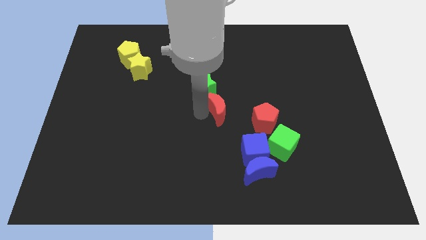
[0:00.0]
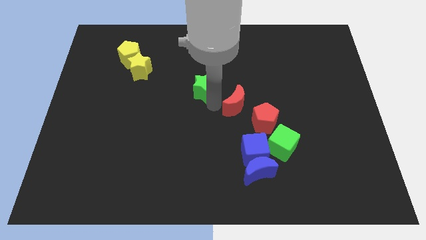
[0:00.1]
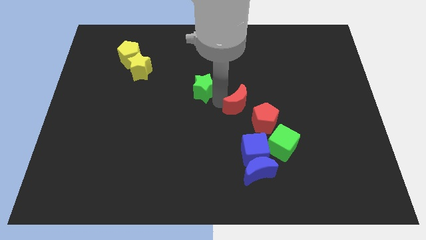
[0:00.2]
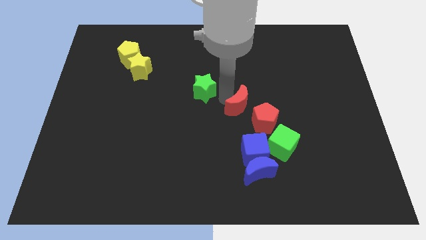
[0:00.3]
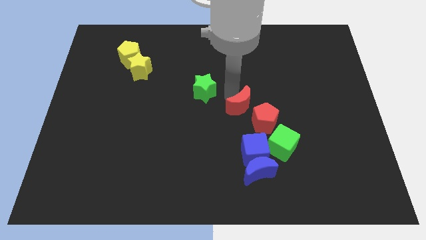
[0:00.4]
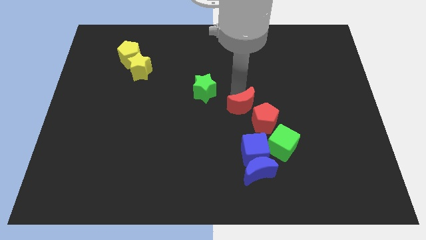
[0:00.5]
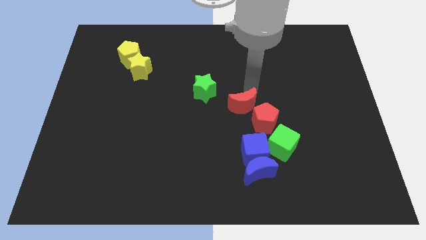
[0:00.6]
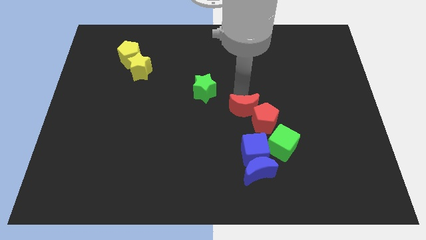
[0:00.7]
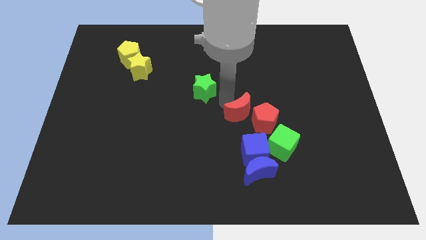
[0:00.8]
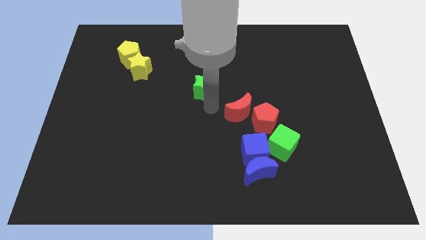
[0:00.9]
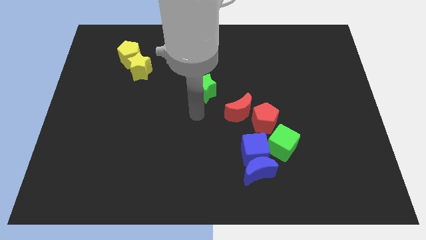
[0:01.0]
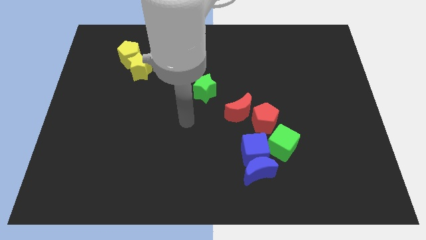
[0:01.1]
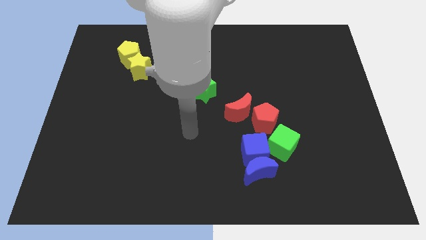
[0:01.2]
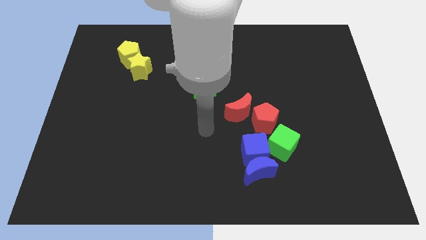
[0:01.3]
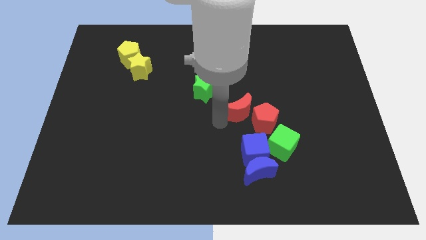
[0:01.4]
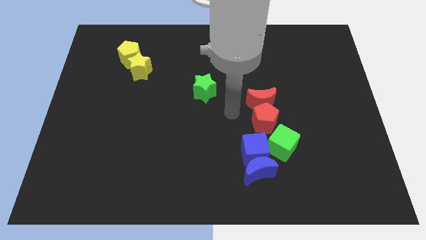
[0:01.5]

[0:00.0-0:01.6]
move the red crescent to the left of the red pentagon

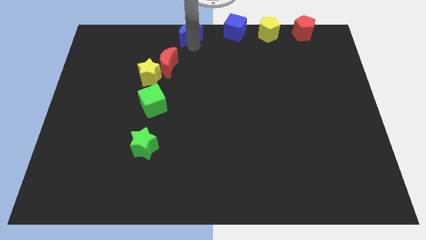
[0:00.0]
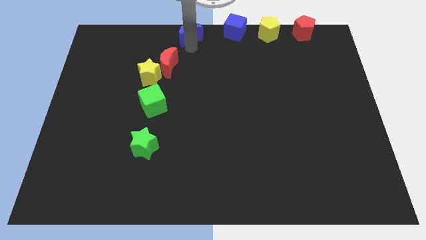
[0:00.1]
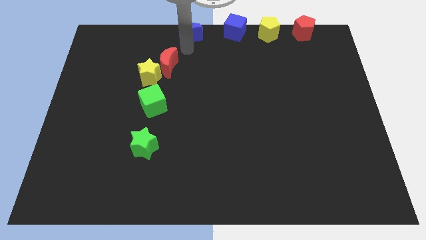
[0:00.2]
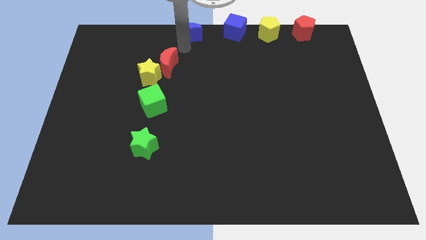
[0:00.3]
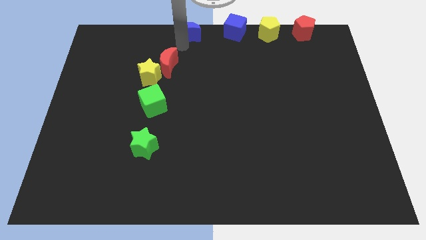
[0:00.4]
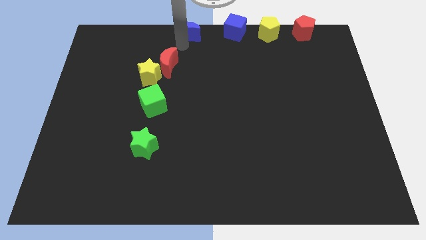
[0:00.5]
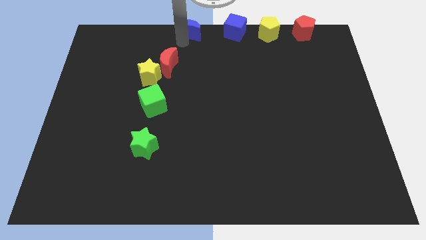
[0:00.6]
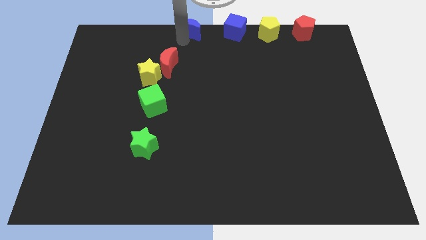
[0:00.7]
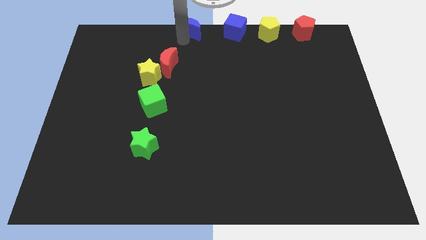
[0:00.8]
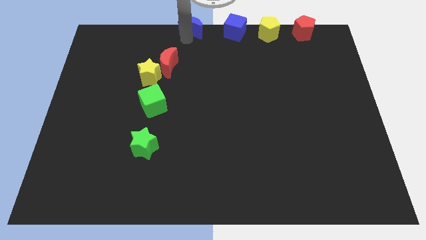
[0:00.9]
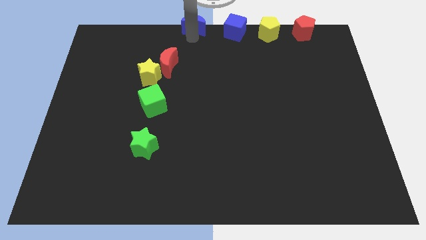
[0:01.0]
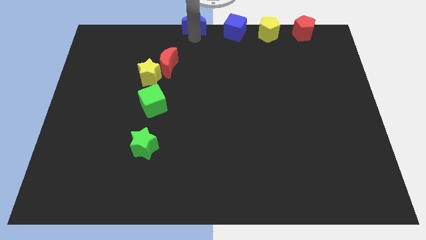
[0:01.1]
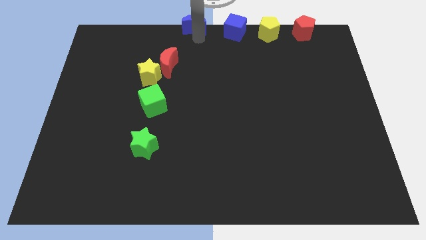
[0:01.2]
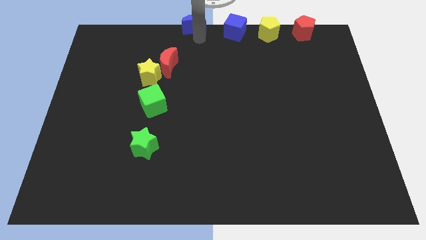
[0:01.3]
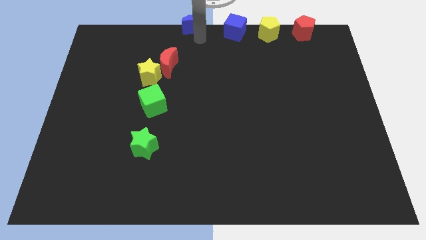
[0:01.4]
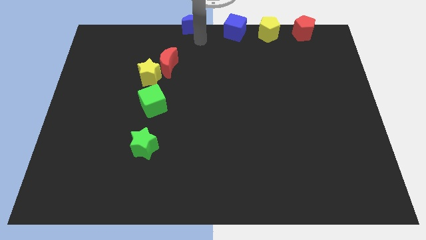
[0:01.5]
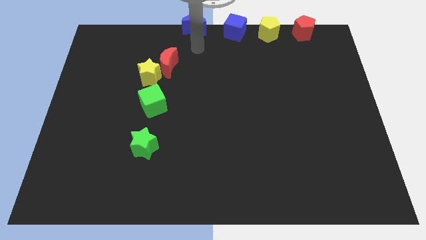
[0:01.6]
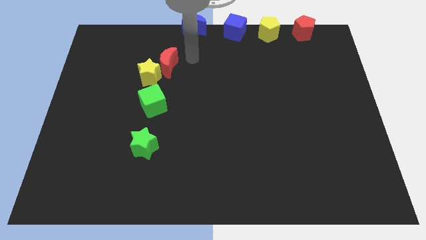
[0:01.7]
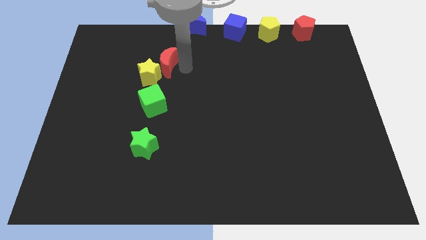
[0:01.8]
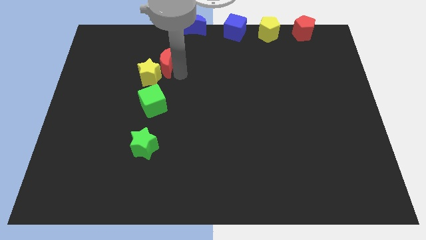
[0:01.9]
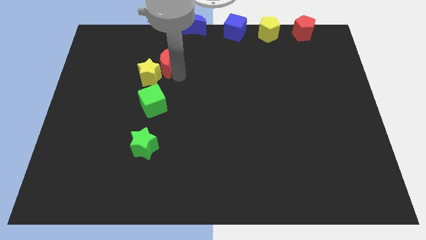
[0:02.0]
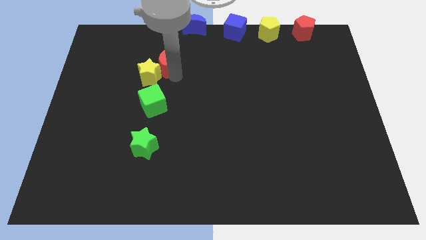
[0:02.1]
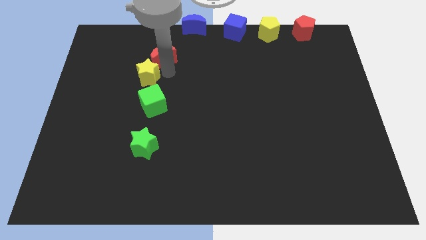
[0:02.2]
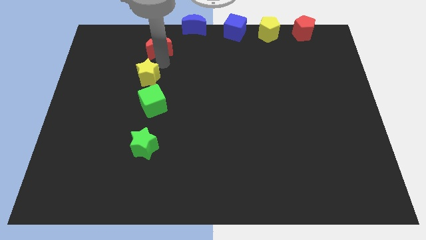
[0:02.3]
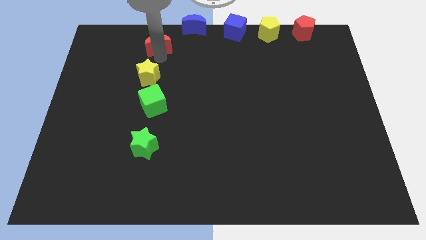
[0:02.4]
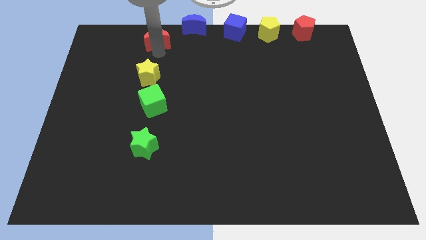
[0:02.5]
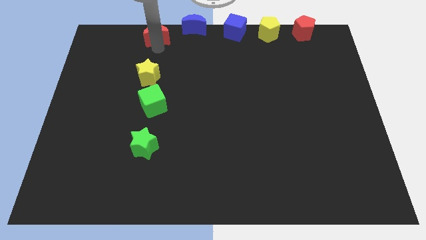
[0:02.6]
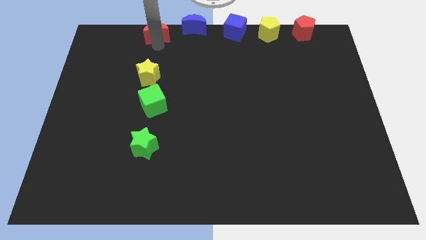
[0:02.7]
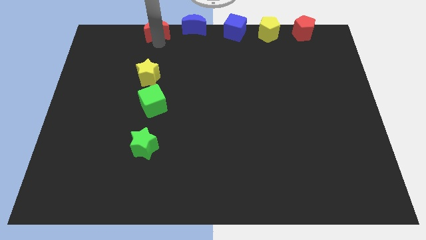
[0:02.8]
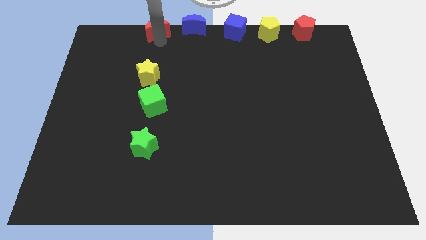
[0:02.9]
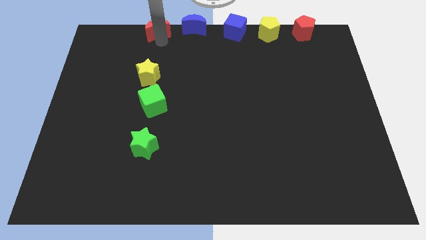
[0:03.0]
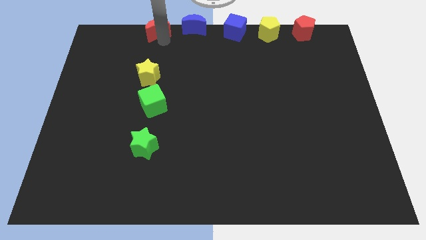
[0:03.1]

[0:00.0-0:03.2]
push red crescent beside blue crescent

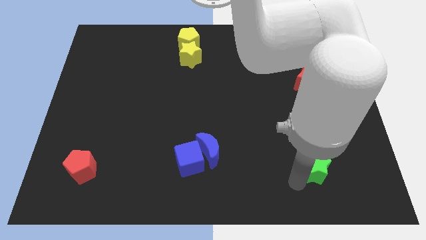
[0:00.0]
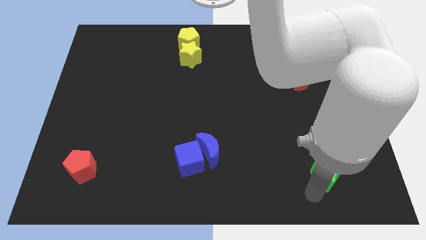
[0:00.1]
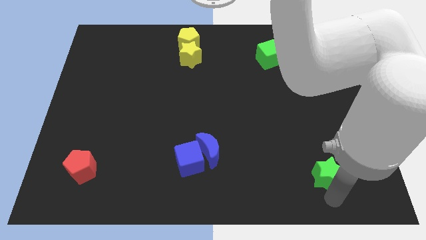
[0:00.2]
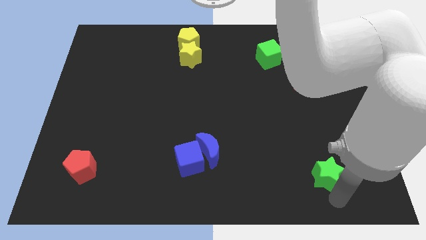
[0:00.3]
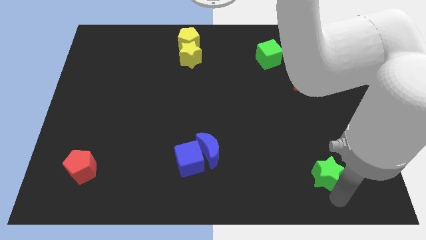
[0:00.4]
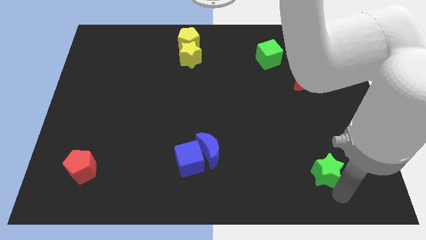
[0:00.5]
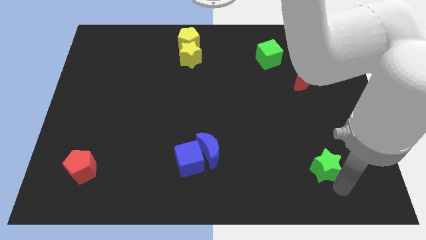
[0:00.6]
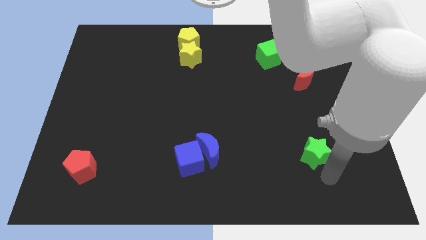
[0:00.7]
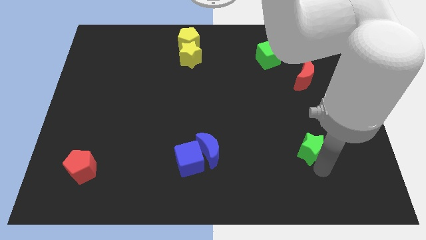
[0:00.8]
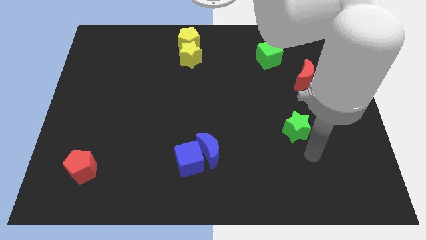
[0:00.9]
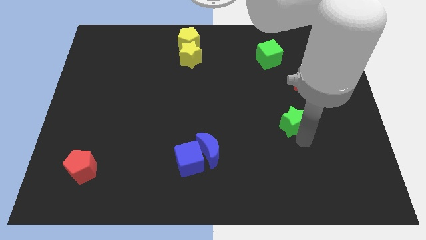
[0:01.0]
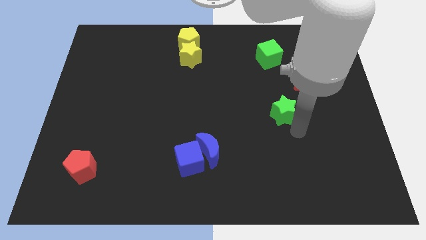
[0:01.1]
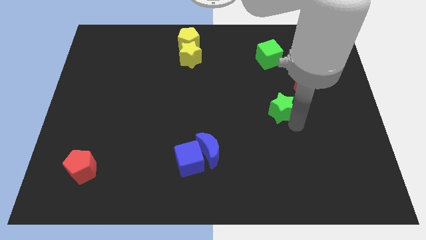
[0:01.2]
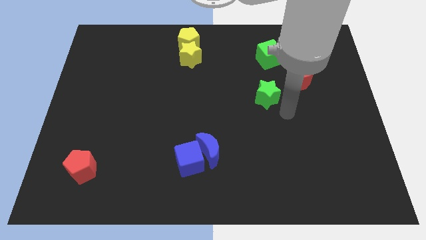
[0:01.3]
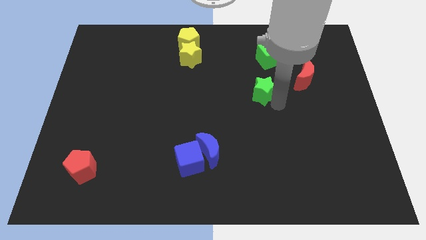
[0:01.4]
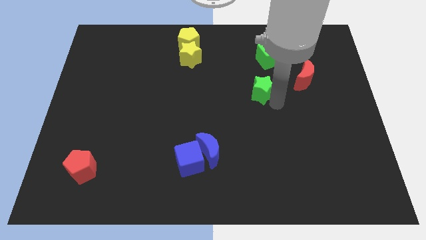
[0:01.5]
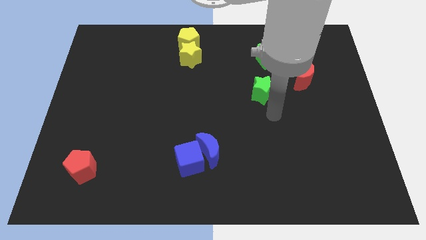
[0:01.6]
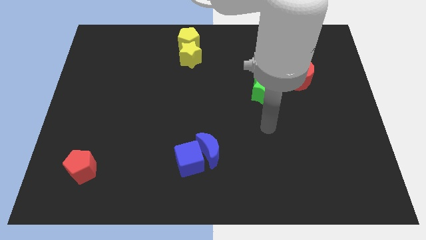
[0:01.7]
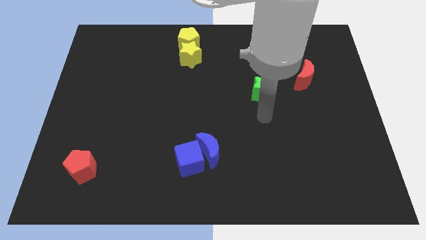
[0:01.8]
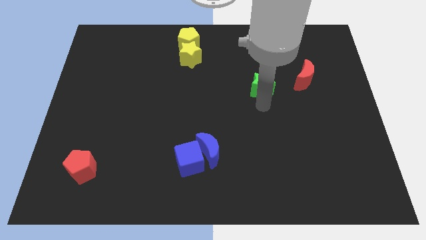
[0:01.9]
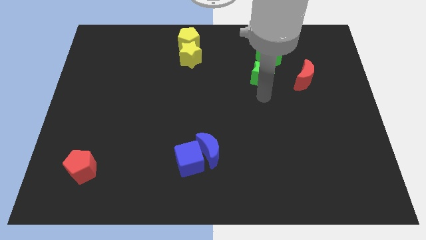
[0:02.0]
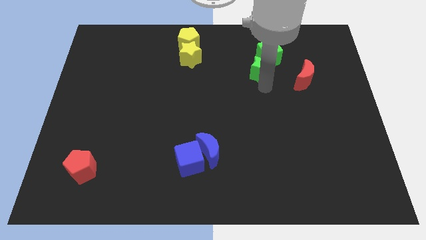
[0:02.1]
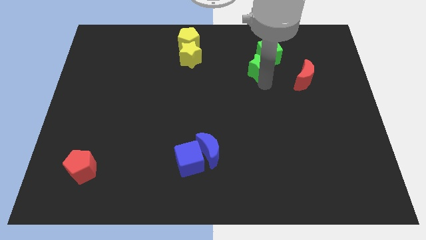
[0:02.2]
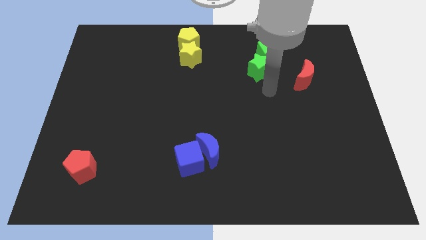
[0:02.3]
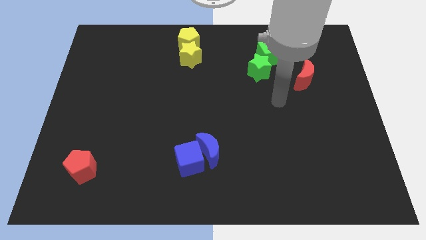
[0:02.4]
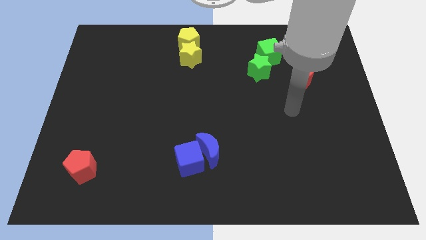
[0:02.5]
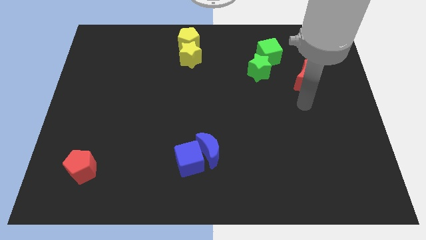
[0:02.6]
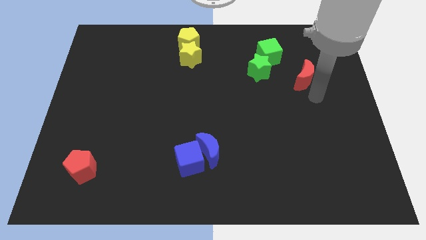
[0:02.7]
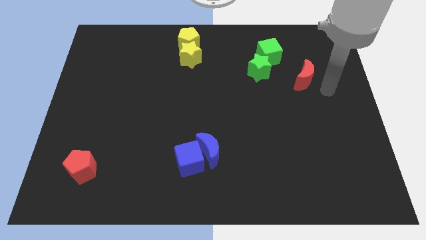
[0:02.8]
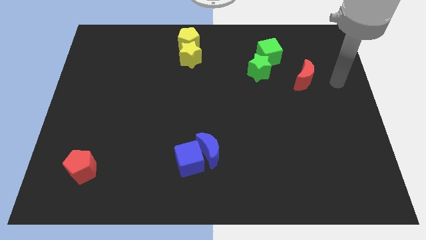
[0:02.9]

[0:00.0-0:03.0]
push the green star into the green cube

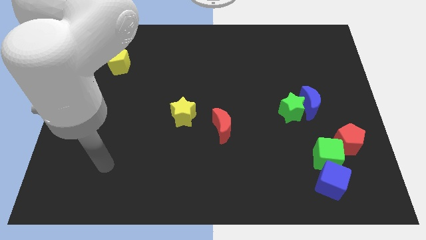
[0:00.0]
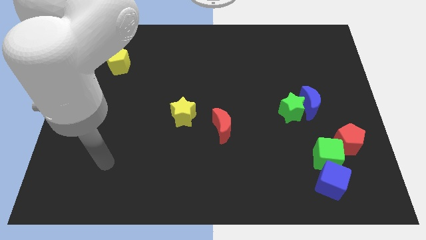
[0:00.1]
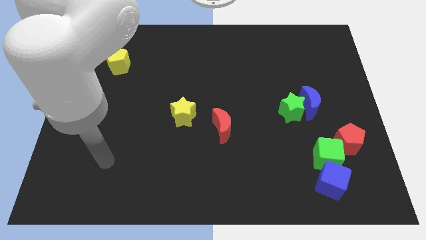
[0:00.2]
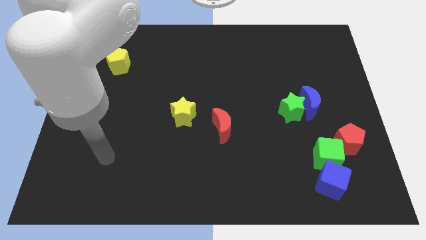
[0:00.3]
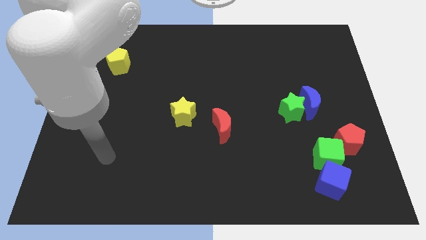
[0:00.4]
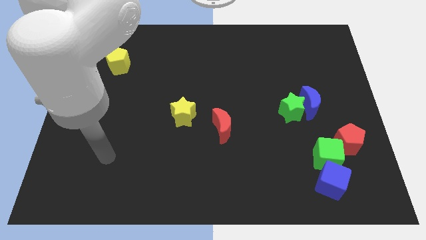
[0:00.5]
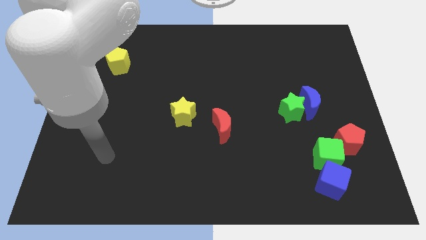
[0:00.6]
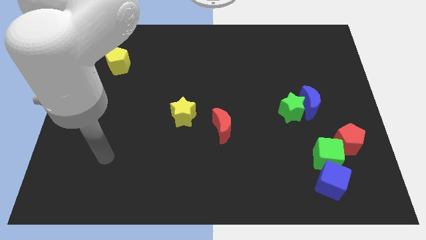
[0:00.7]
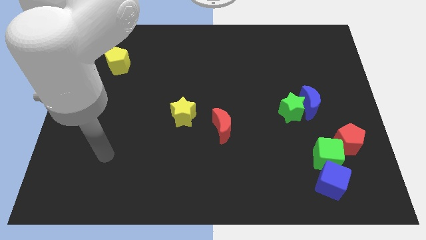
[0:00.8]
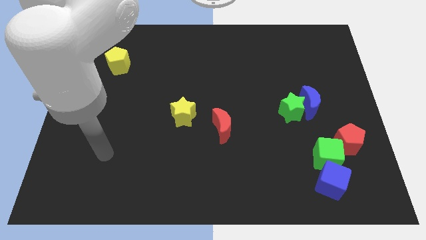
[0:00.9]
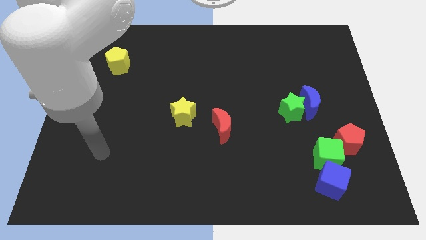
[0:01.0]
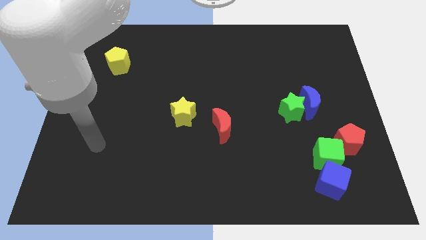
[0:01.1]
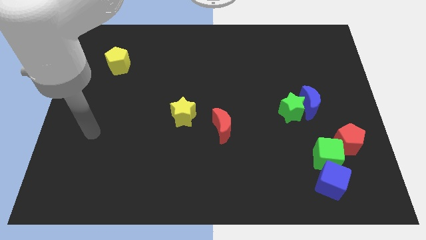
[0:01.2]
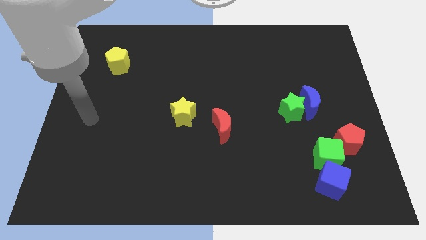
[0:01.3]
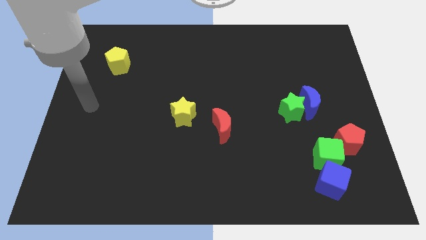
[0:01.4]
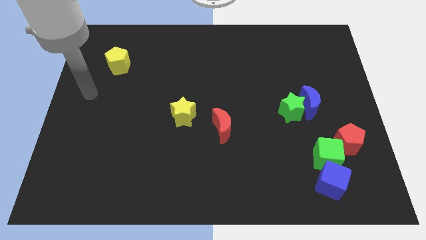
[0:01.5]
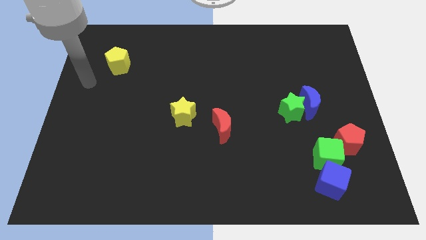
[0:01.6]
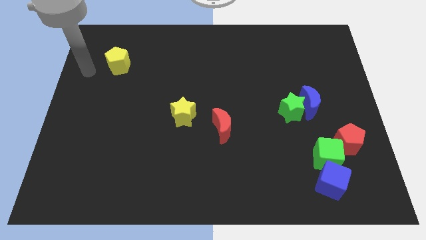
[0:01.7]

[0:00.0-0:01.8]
move your arm to the left of the yellow pentagon
